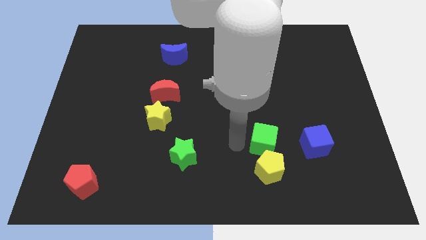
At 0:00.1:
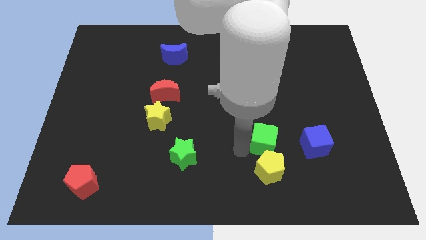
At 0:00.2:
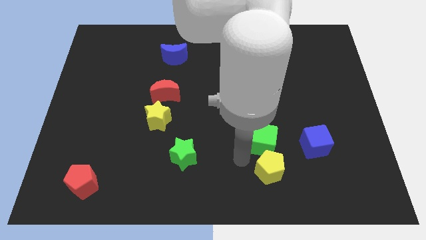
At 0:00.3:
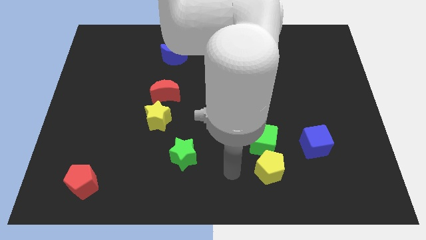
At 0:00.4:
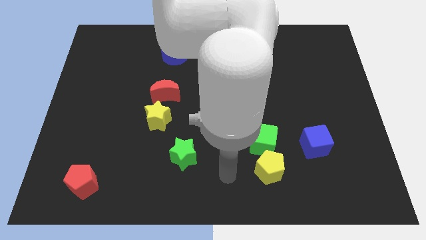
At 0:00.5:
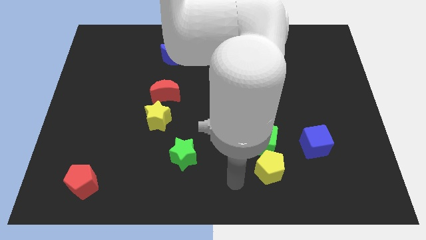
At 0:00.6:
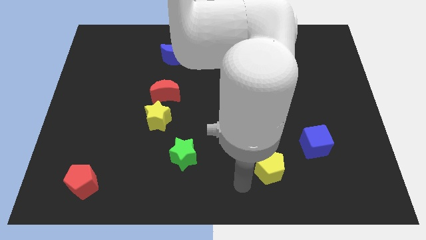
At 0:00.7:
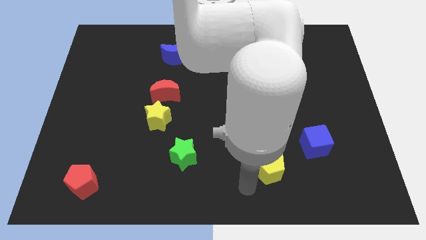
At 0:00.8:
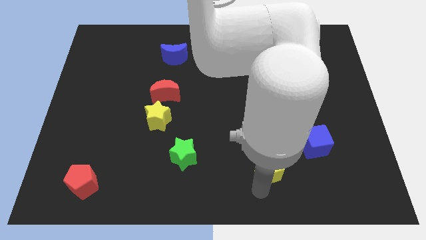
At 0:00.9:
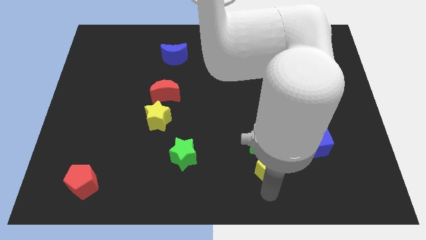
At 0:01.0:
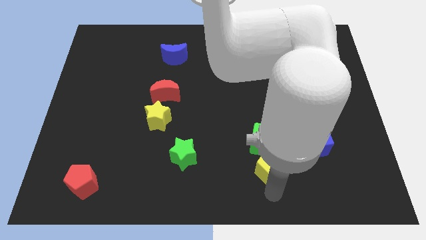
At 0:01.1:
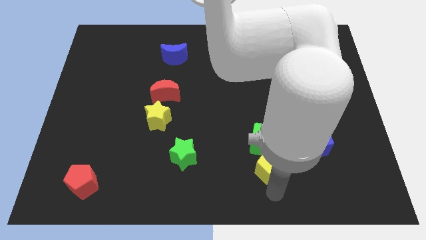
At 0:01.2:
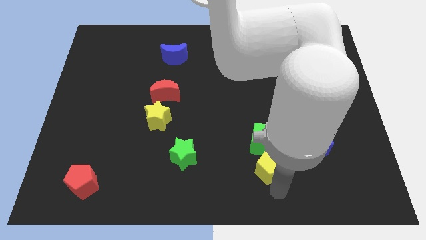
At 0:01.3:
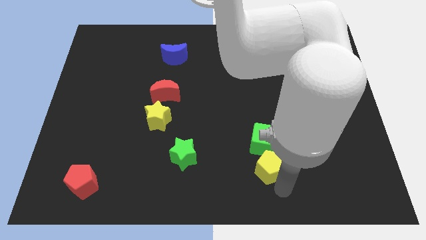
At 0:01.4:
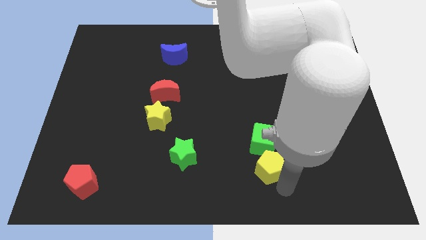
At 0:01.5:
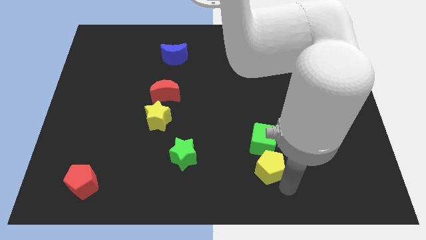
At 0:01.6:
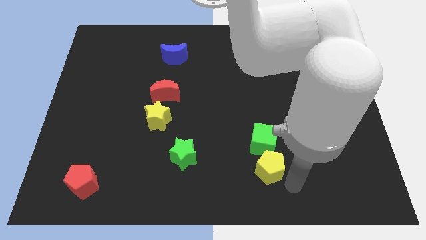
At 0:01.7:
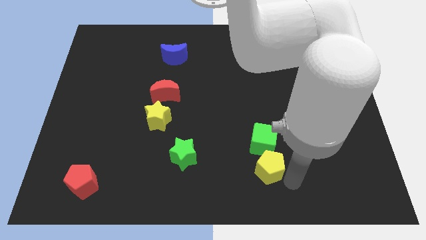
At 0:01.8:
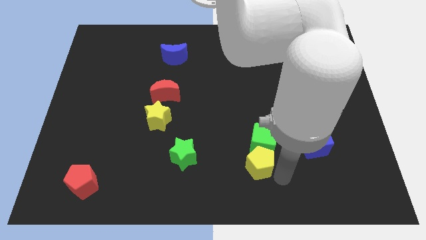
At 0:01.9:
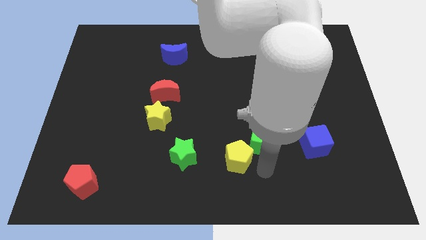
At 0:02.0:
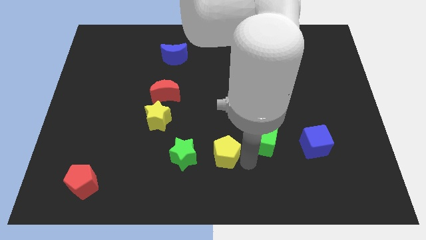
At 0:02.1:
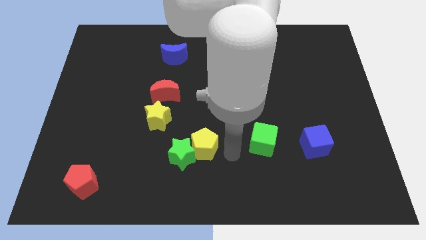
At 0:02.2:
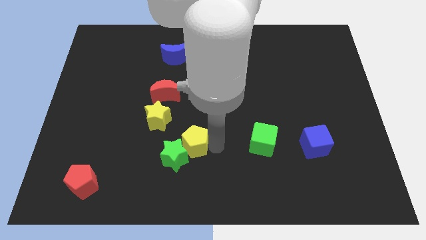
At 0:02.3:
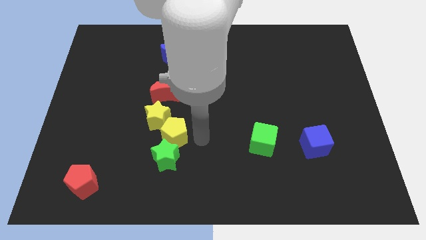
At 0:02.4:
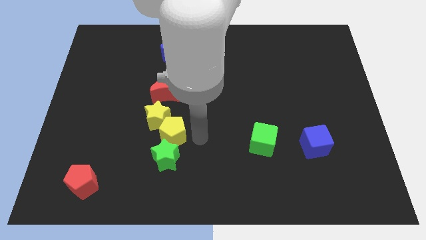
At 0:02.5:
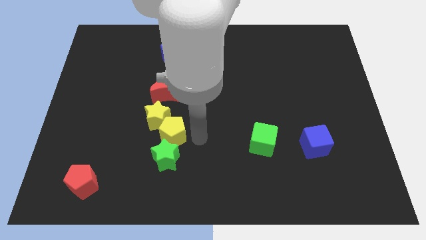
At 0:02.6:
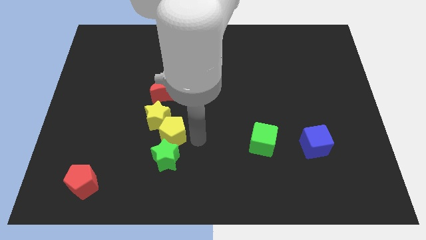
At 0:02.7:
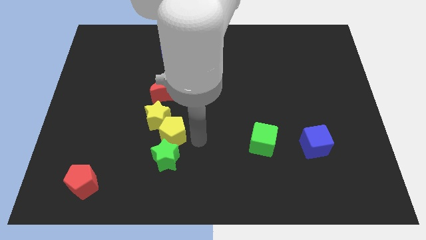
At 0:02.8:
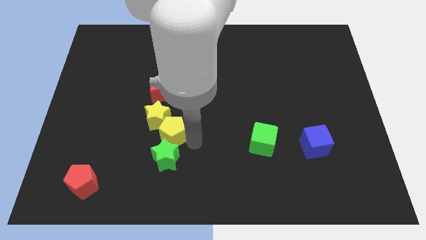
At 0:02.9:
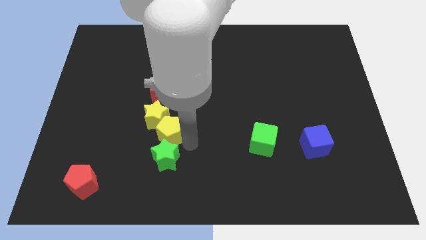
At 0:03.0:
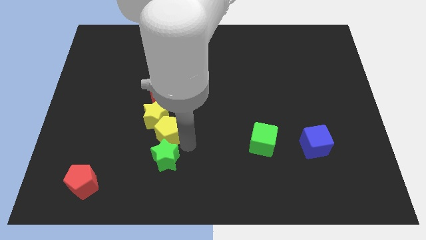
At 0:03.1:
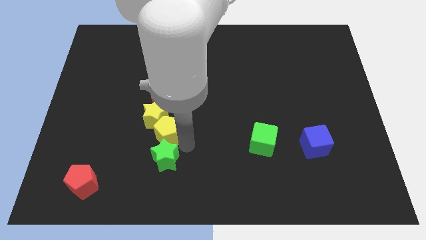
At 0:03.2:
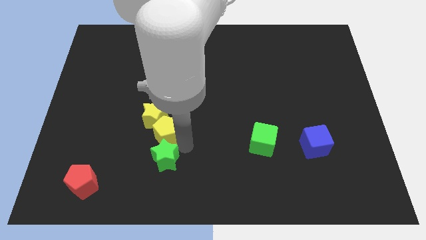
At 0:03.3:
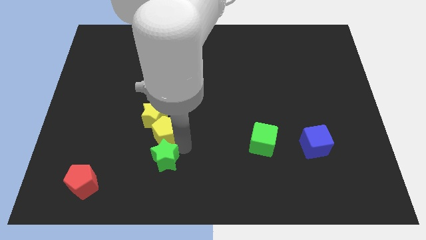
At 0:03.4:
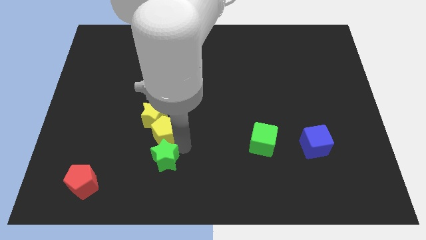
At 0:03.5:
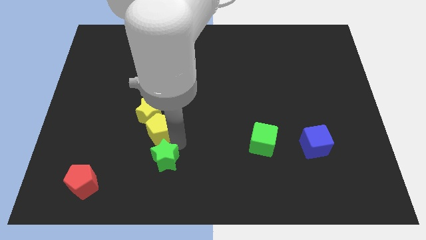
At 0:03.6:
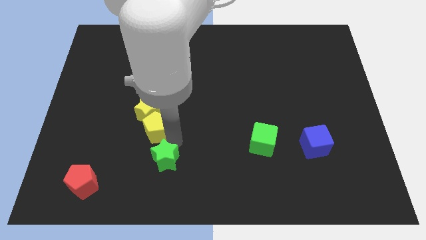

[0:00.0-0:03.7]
place yellow pentagon below green star

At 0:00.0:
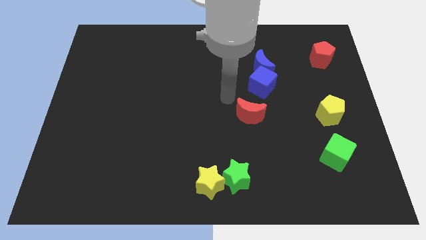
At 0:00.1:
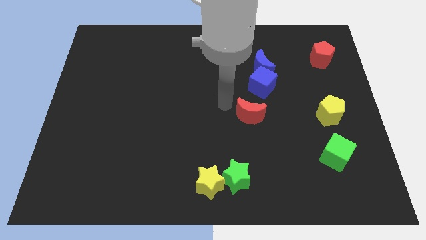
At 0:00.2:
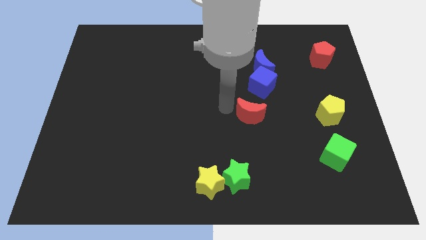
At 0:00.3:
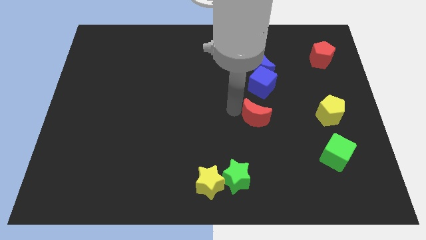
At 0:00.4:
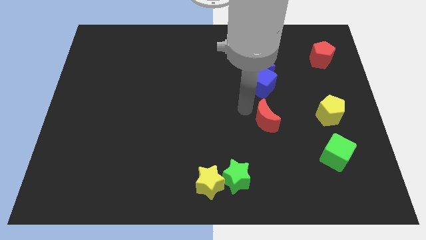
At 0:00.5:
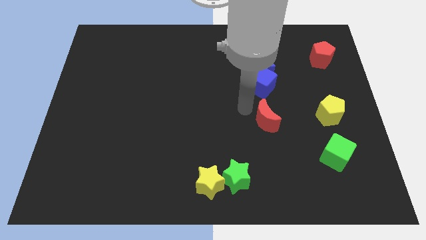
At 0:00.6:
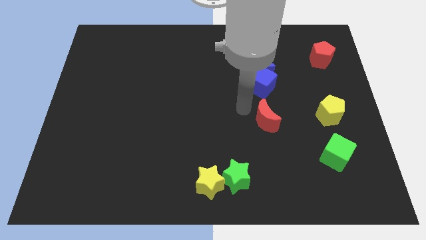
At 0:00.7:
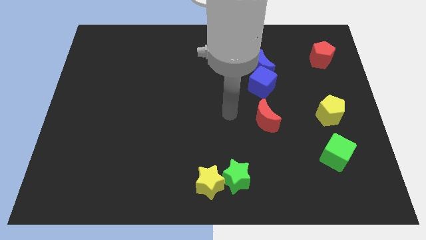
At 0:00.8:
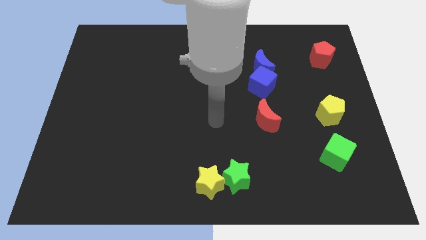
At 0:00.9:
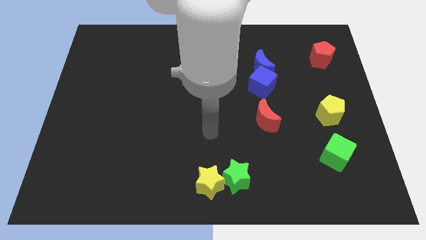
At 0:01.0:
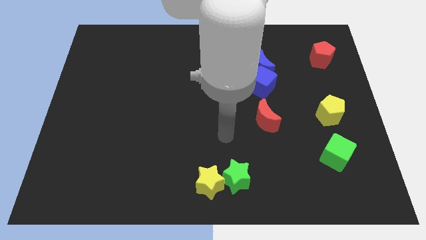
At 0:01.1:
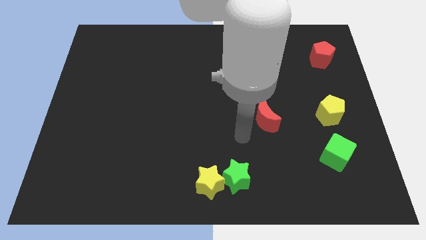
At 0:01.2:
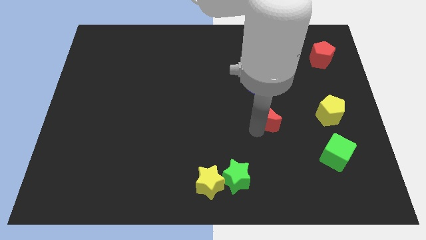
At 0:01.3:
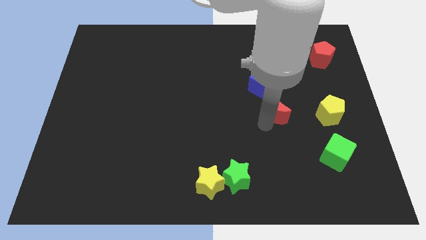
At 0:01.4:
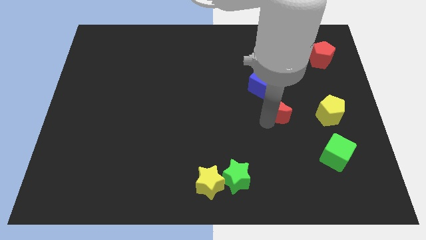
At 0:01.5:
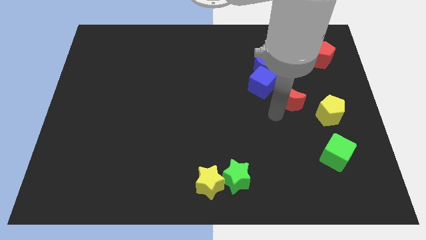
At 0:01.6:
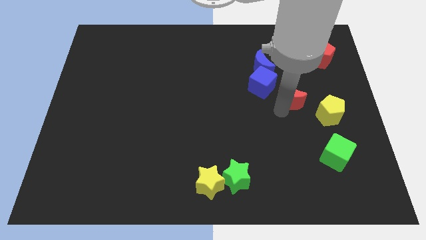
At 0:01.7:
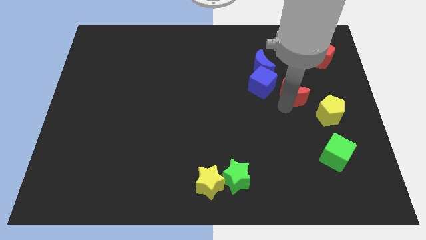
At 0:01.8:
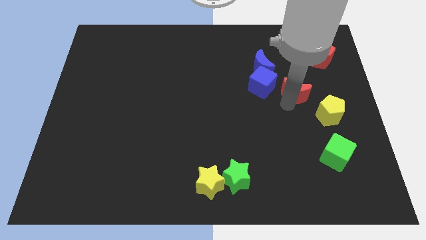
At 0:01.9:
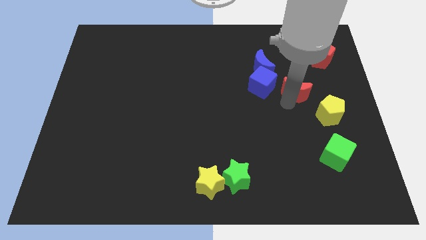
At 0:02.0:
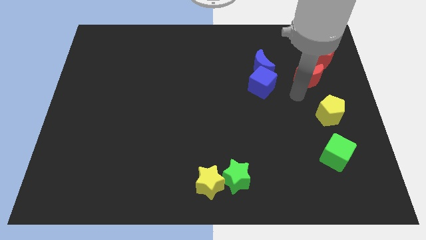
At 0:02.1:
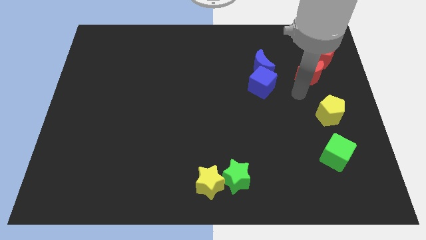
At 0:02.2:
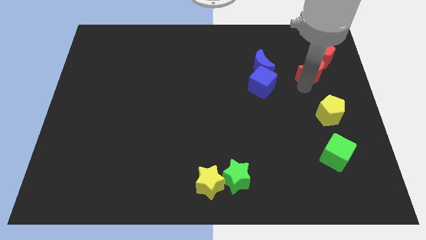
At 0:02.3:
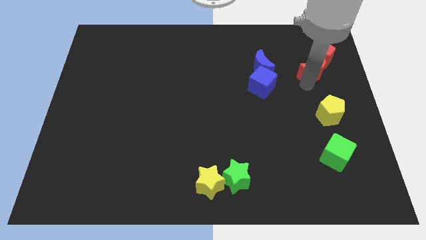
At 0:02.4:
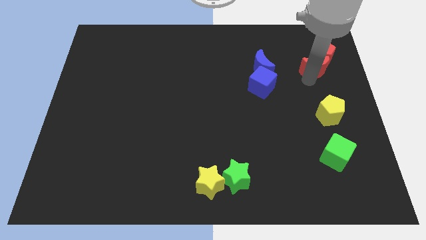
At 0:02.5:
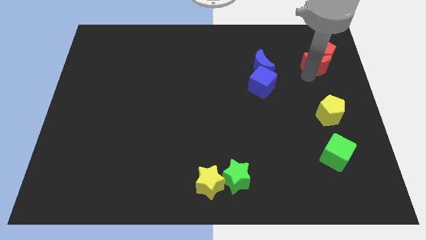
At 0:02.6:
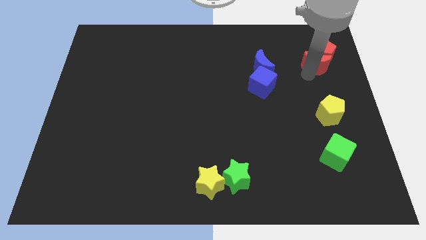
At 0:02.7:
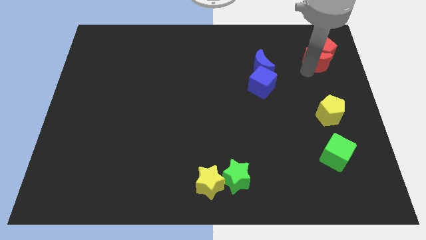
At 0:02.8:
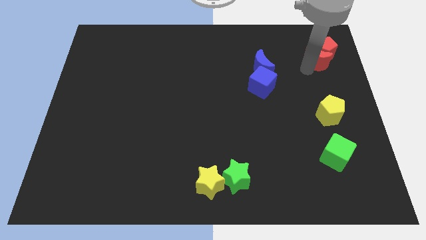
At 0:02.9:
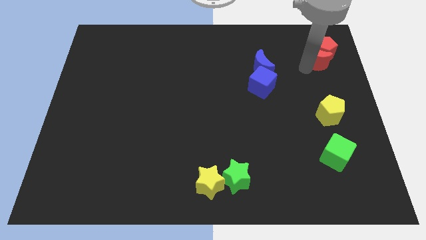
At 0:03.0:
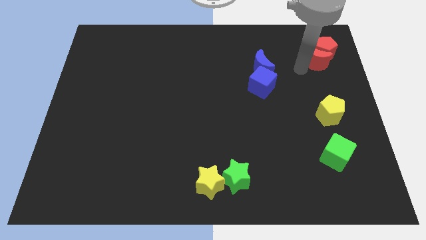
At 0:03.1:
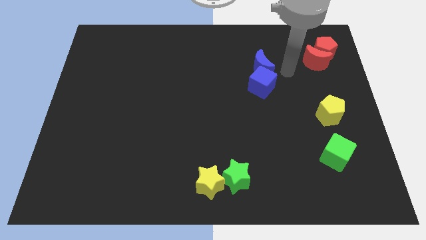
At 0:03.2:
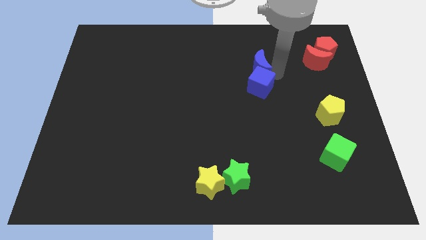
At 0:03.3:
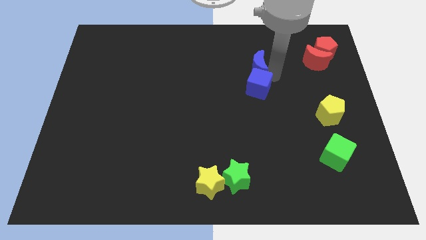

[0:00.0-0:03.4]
push red crescent towards the red pentagon

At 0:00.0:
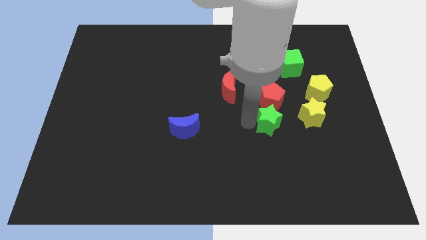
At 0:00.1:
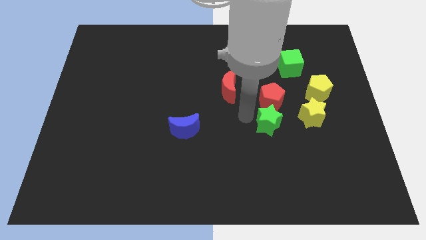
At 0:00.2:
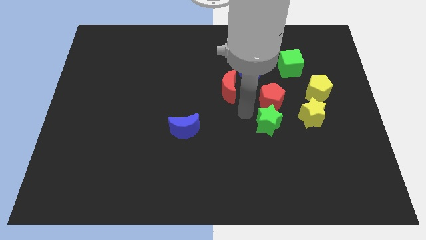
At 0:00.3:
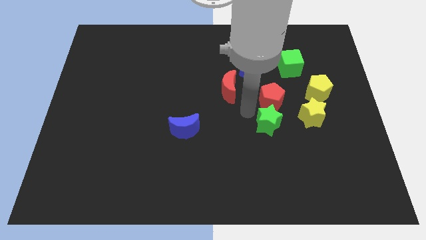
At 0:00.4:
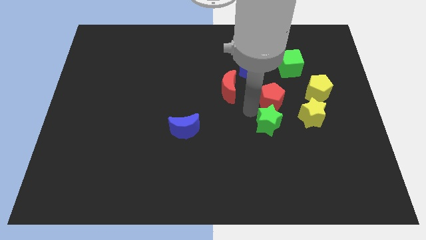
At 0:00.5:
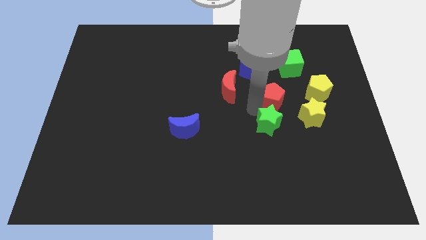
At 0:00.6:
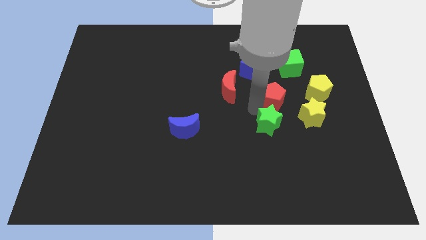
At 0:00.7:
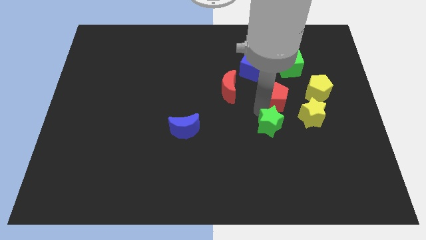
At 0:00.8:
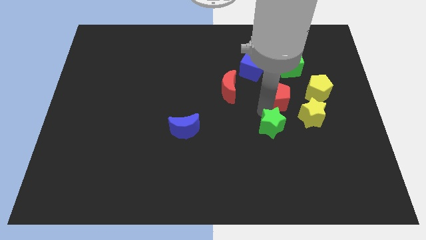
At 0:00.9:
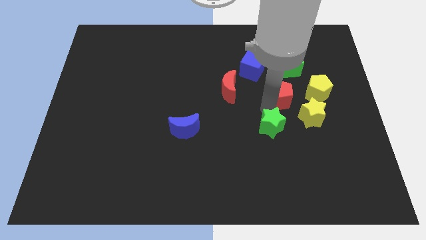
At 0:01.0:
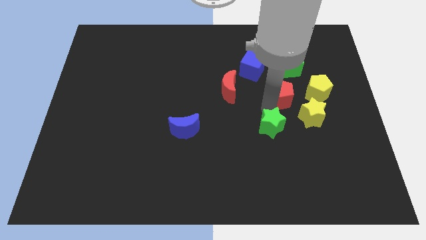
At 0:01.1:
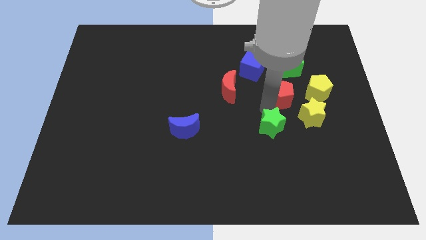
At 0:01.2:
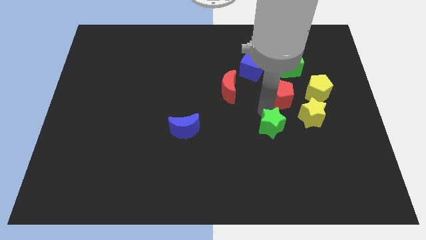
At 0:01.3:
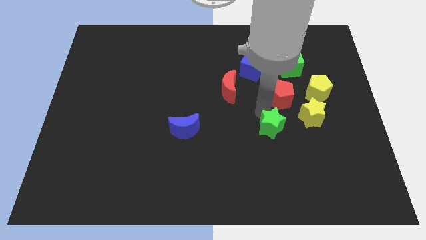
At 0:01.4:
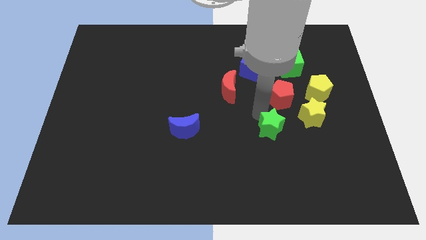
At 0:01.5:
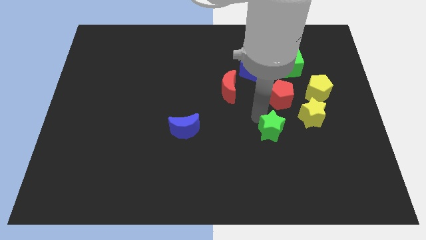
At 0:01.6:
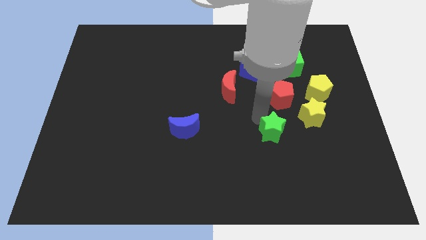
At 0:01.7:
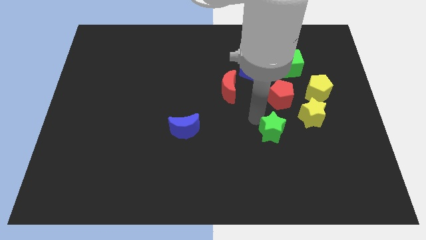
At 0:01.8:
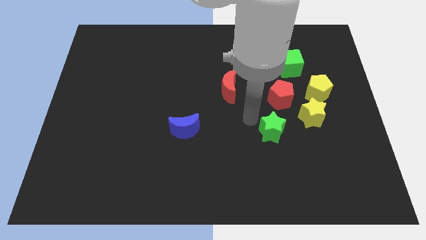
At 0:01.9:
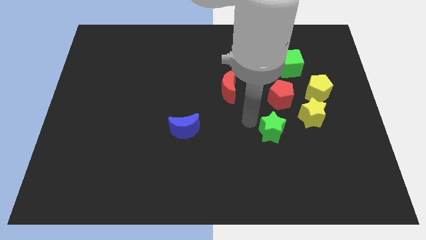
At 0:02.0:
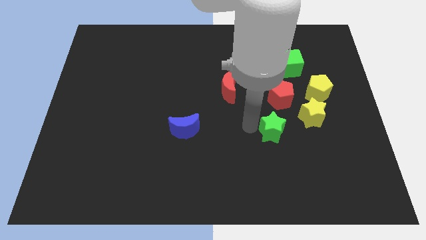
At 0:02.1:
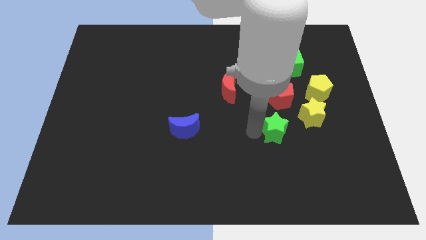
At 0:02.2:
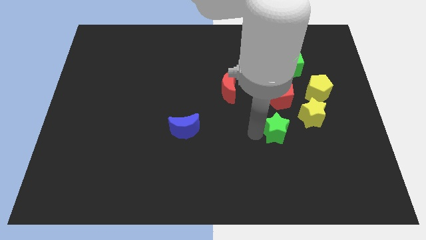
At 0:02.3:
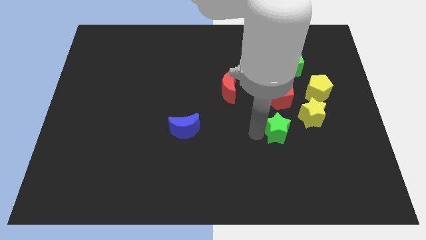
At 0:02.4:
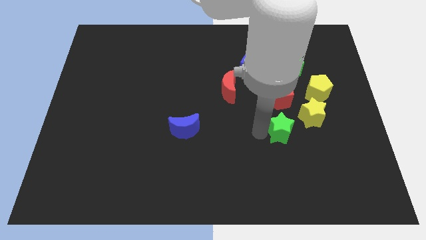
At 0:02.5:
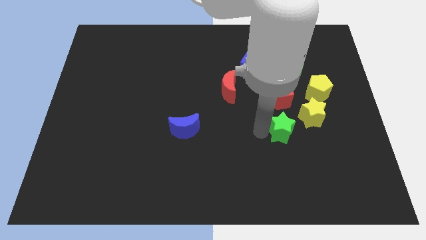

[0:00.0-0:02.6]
separate green star from red pentagon
